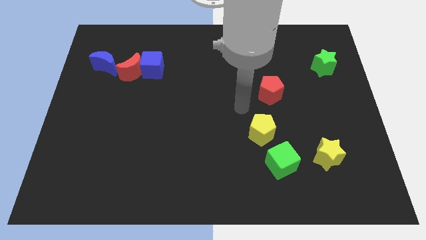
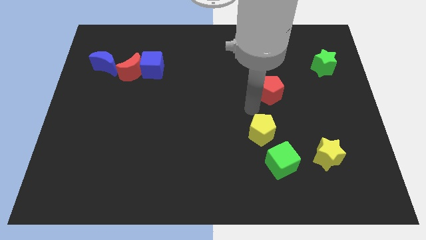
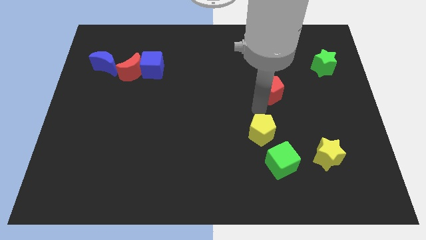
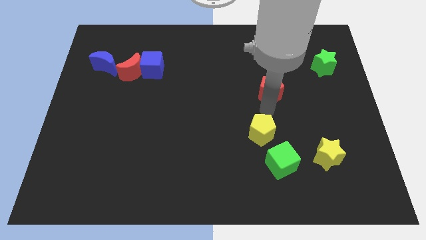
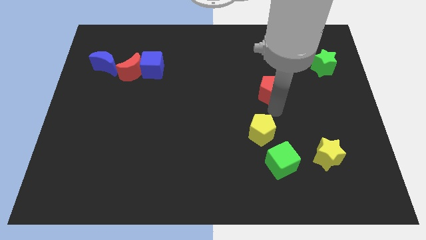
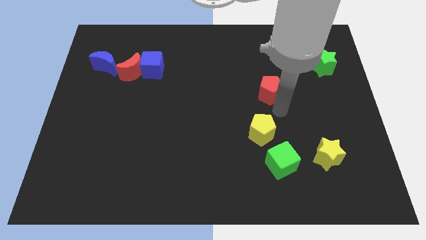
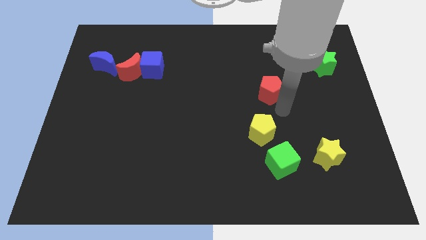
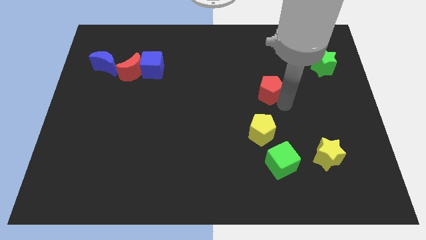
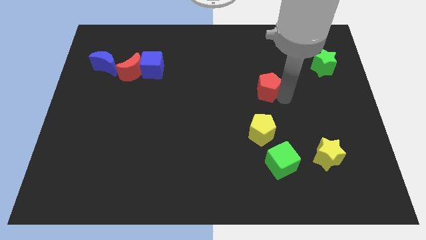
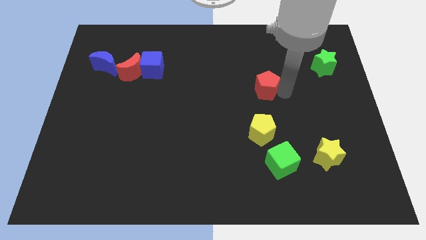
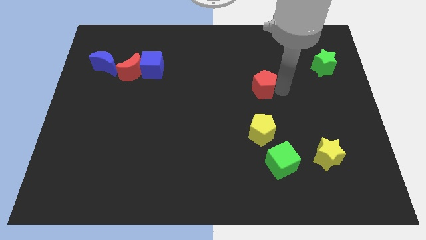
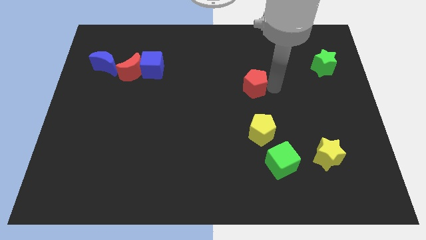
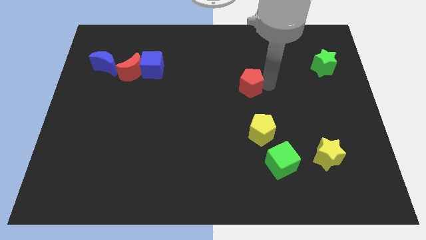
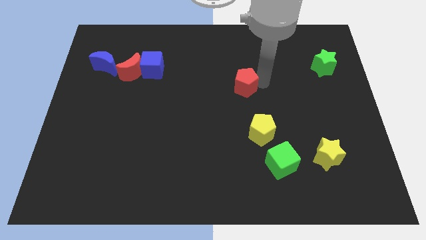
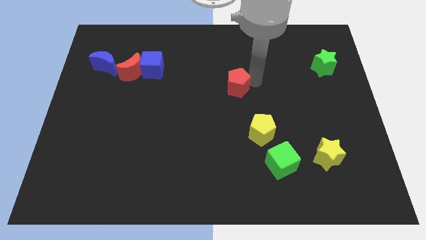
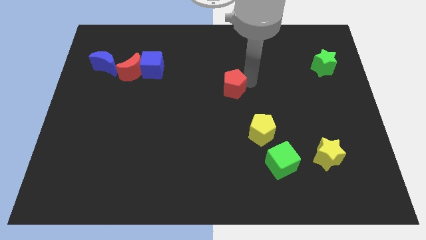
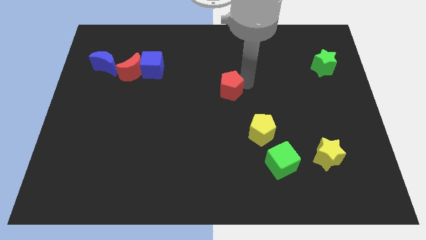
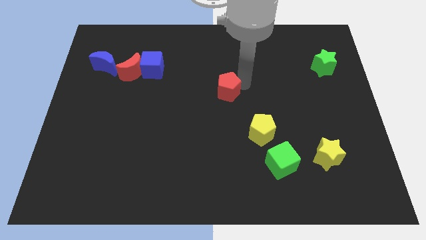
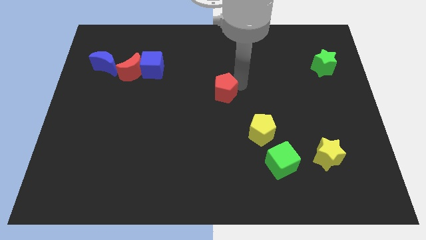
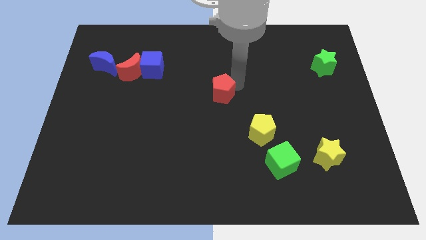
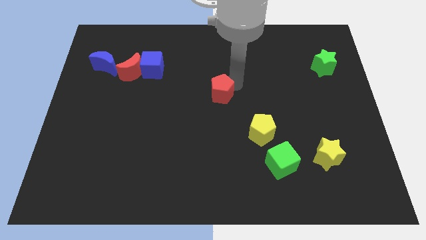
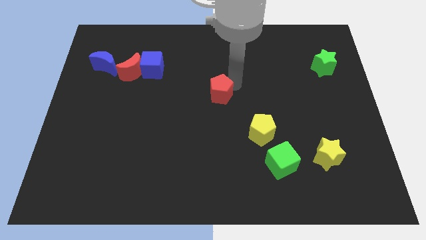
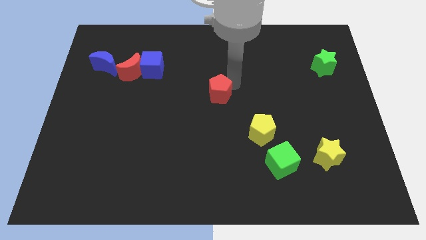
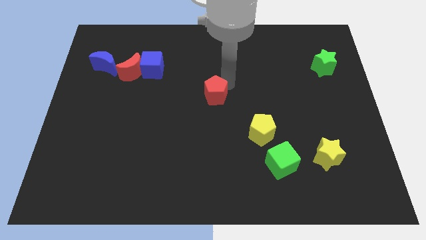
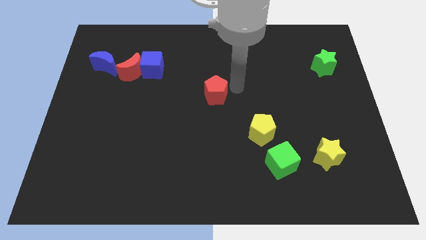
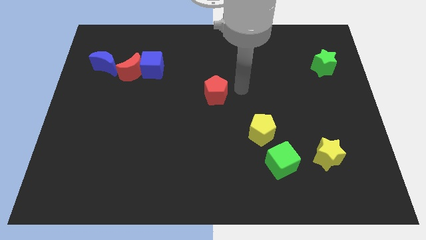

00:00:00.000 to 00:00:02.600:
push the red pentagon to the center of the board

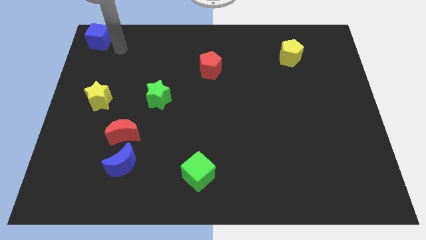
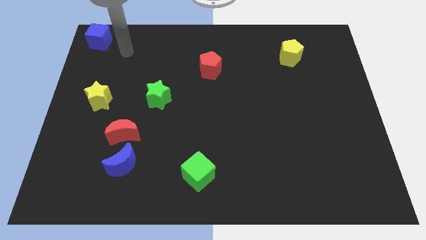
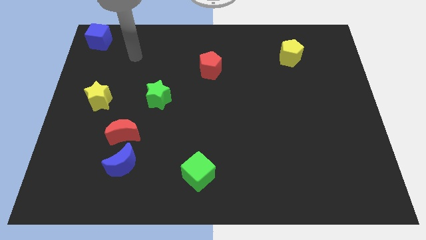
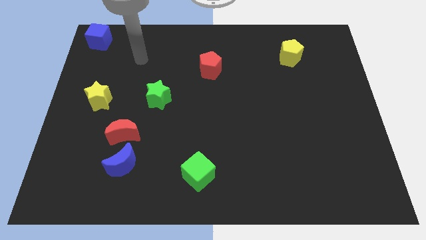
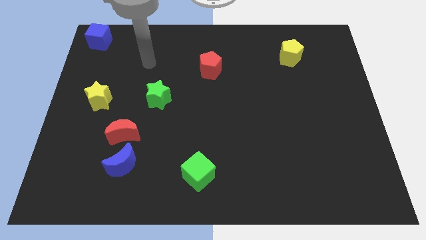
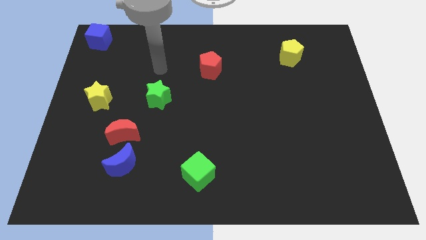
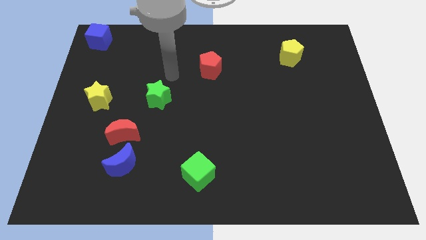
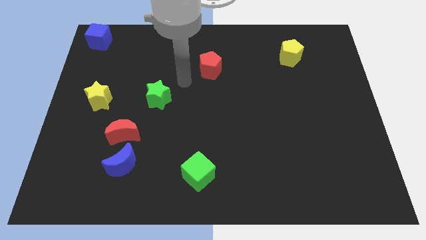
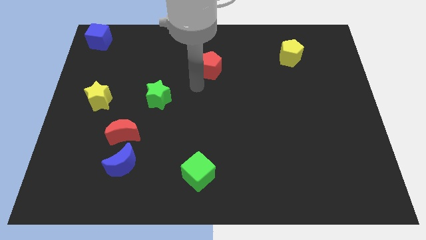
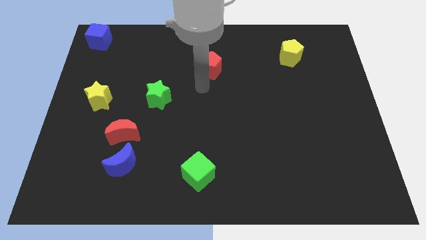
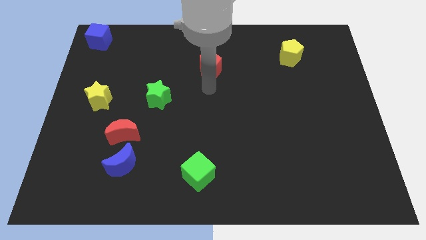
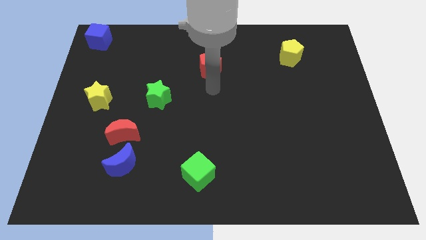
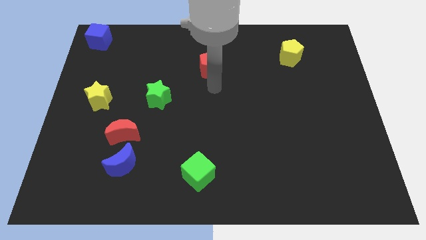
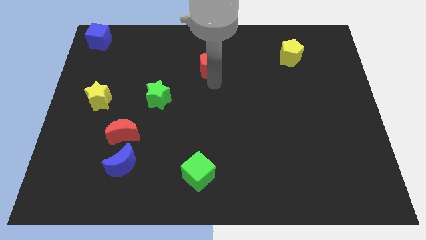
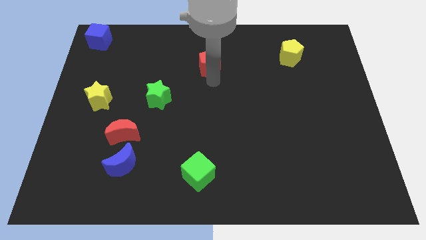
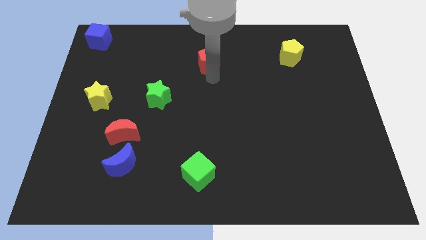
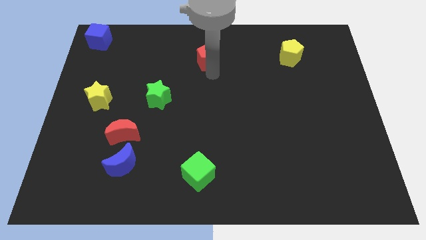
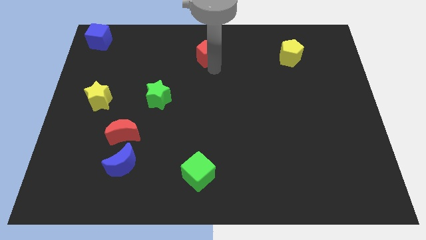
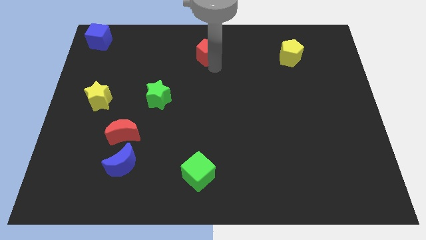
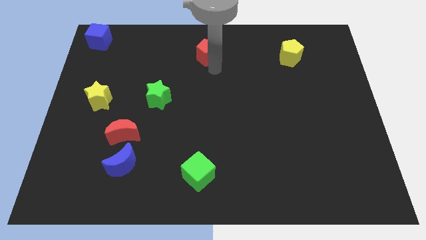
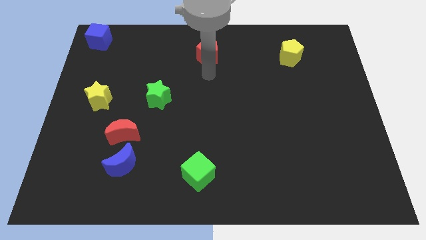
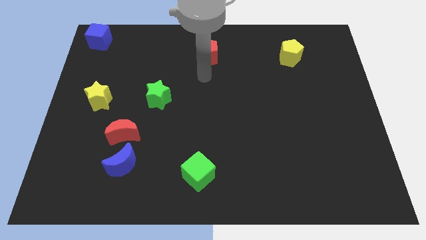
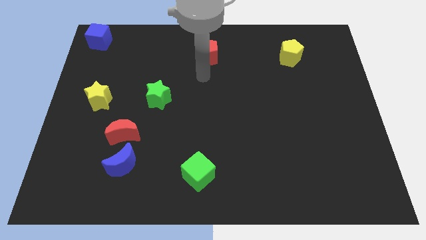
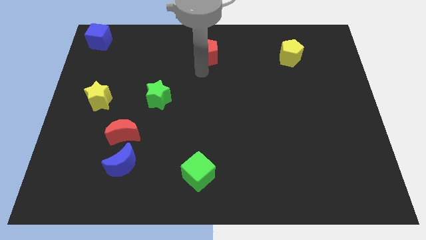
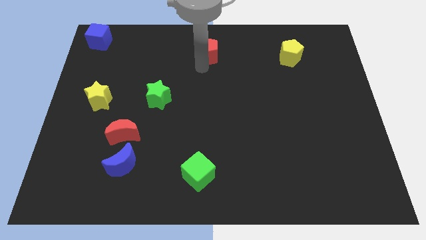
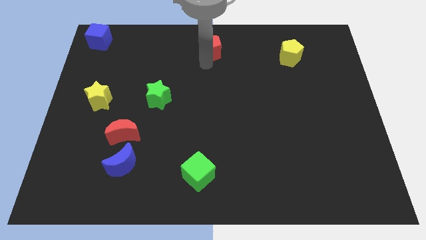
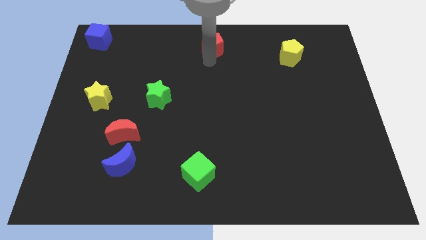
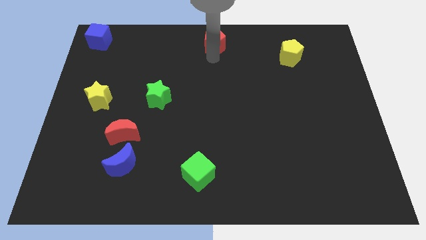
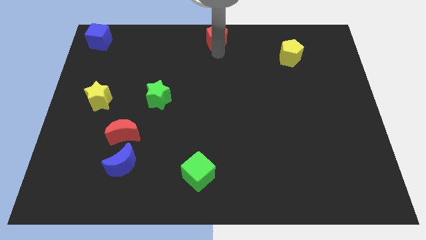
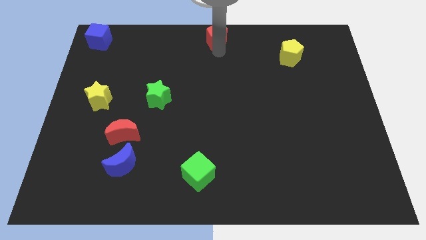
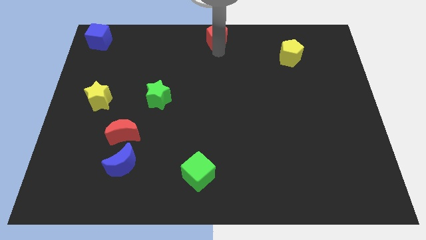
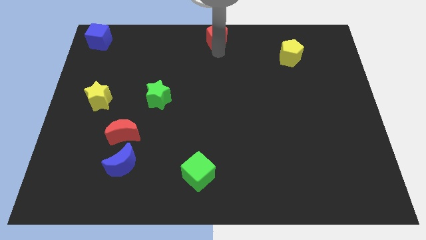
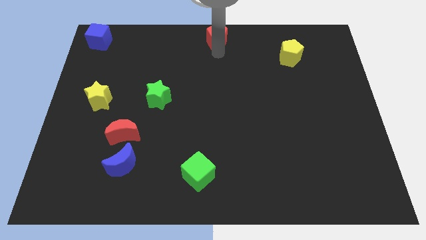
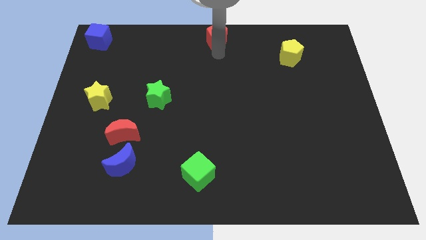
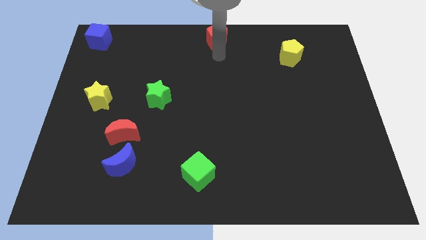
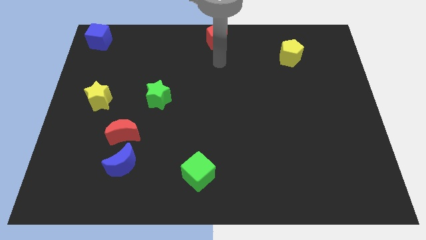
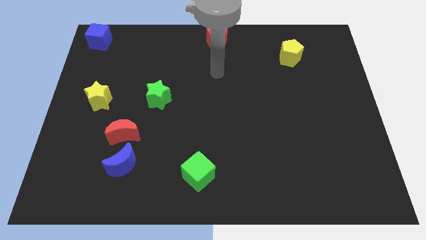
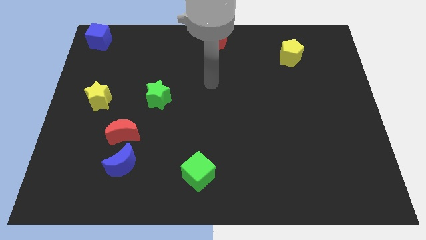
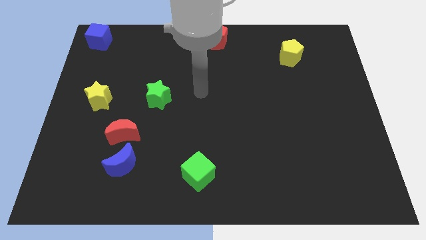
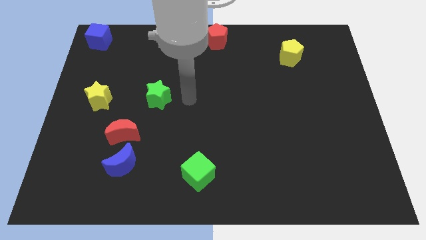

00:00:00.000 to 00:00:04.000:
push the red pentagon to the top center of the board

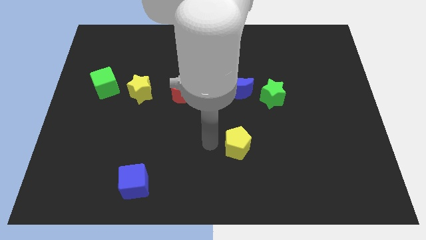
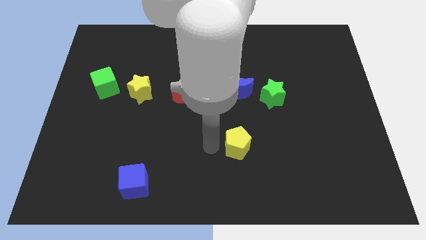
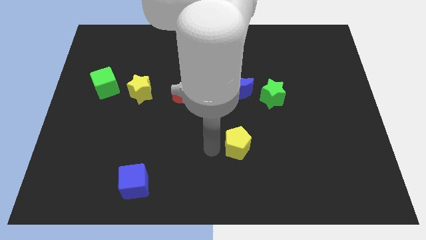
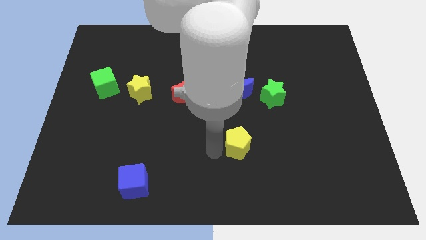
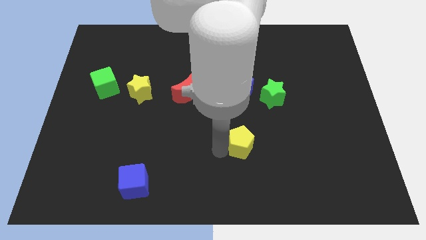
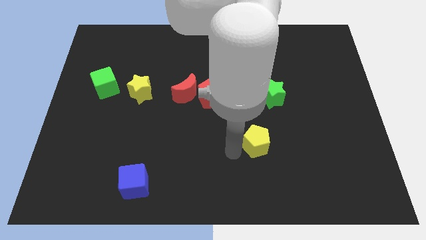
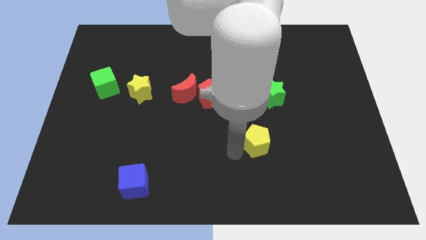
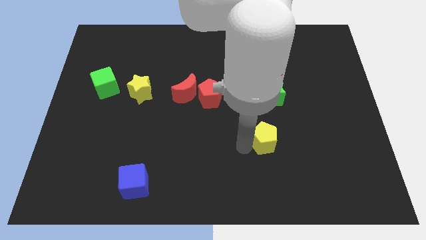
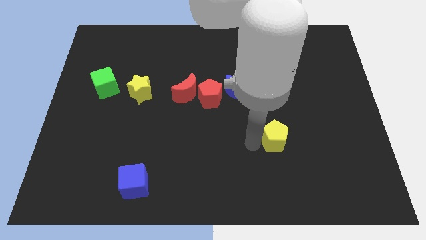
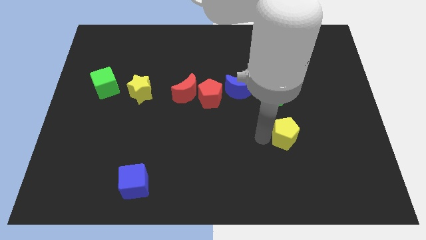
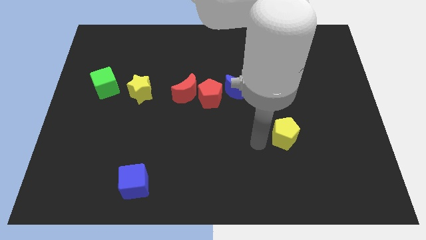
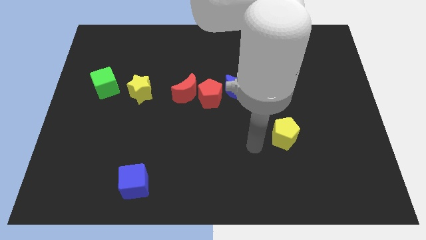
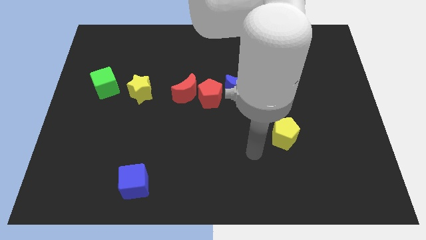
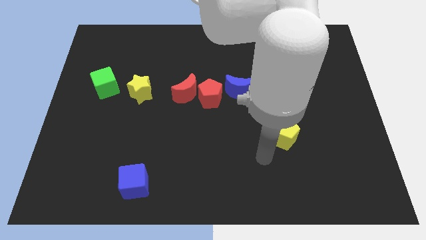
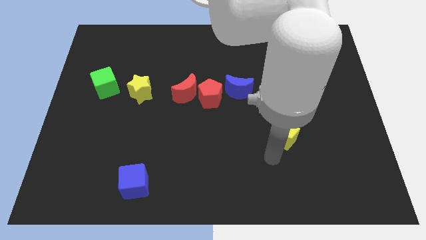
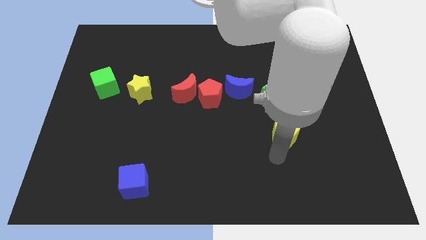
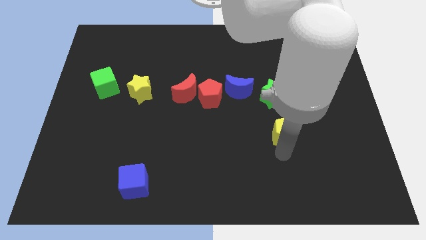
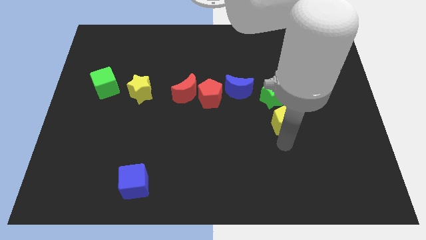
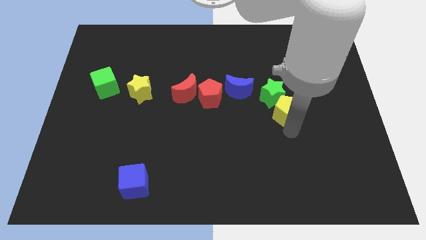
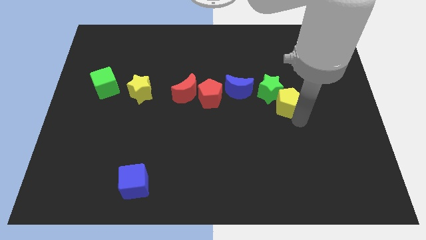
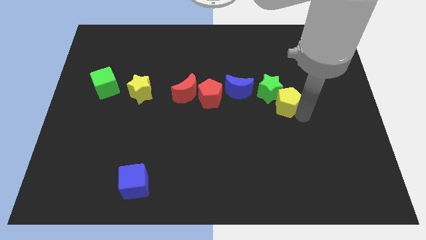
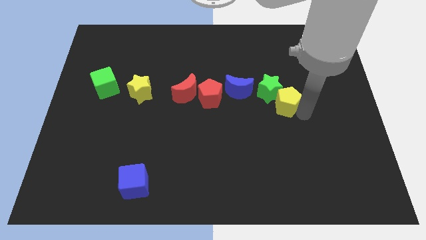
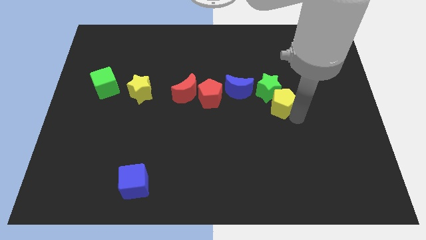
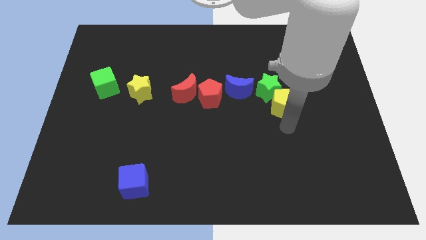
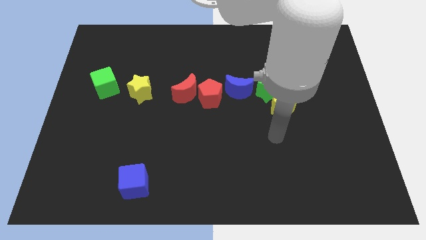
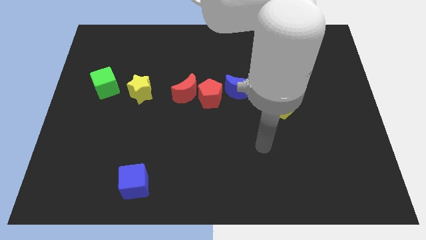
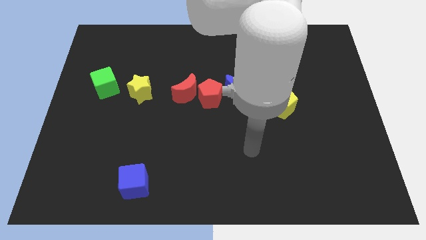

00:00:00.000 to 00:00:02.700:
push the yellow pentagon close the green star
